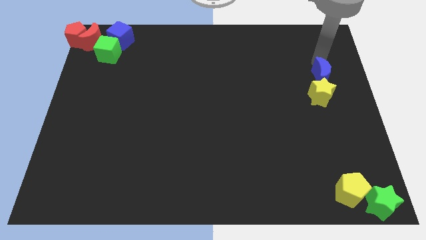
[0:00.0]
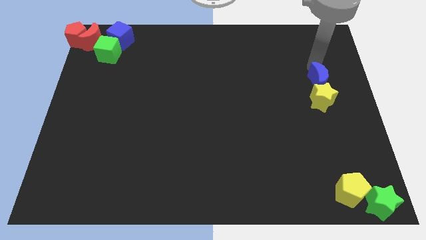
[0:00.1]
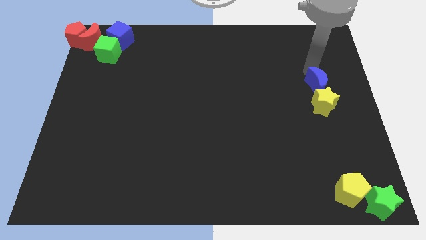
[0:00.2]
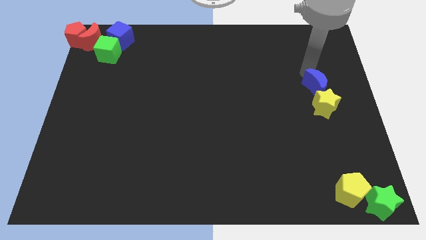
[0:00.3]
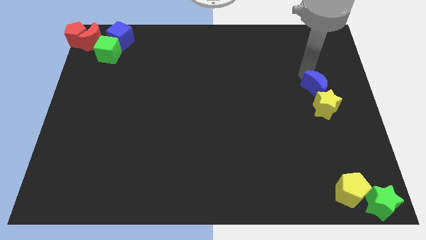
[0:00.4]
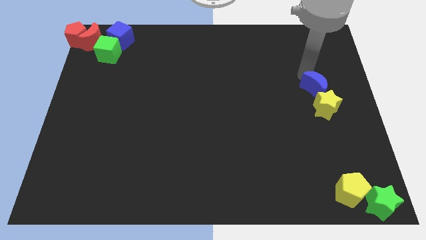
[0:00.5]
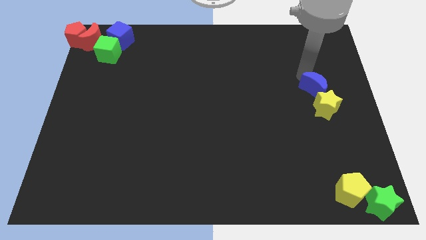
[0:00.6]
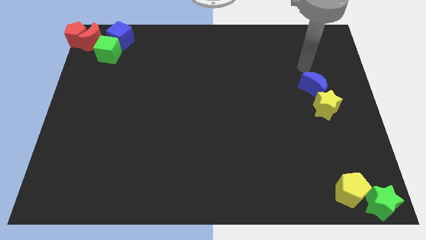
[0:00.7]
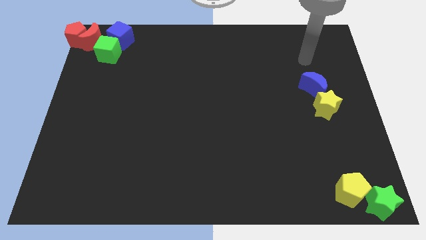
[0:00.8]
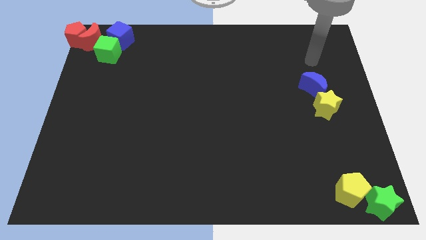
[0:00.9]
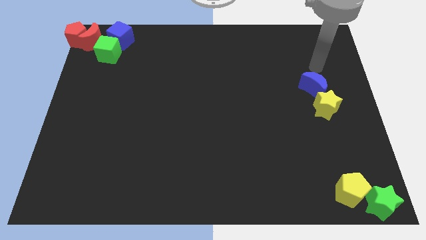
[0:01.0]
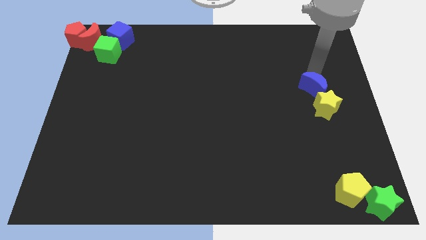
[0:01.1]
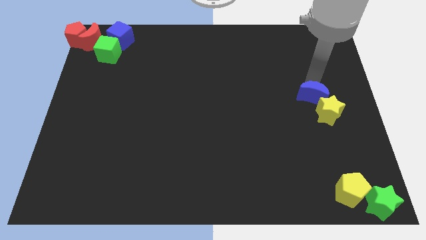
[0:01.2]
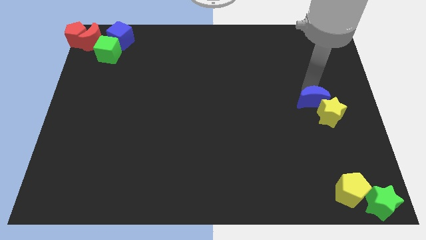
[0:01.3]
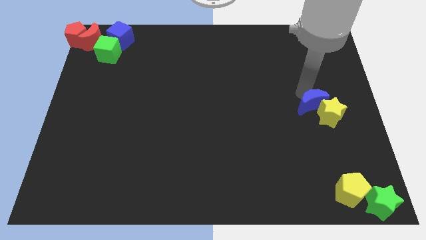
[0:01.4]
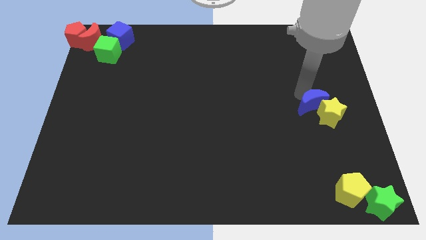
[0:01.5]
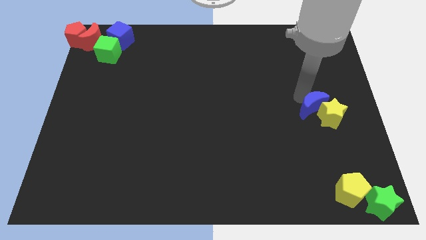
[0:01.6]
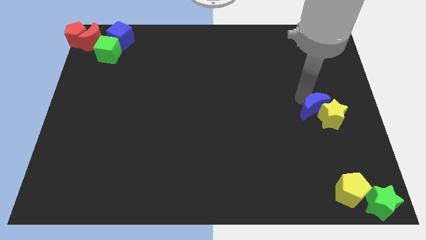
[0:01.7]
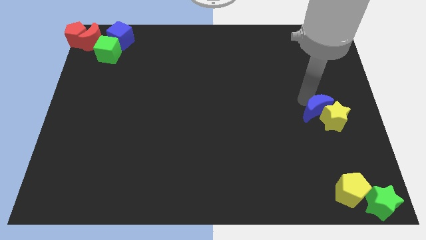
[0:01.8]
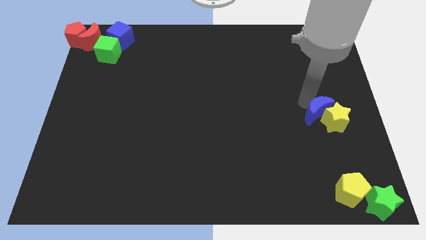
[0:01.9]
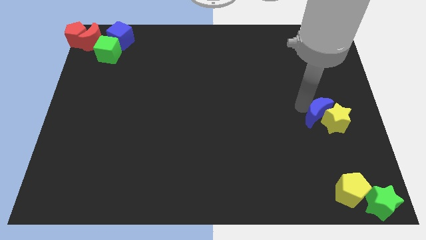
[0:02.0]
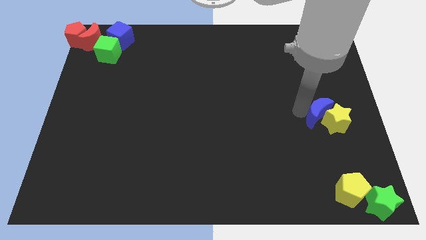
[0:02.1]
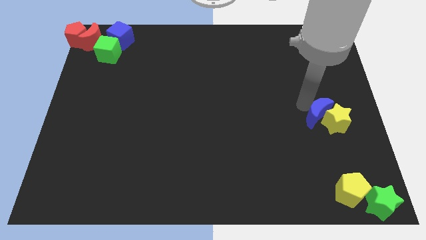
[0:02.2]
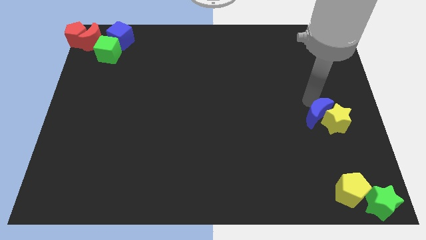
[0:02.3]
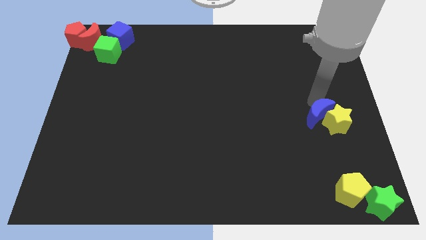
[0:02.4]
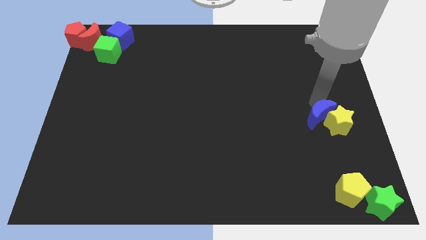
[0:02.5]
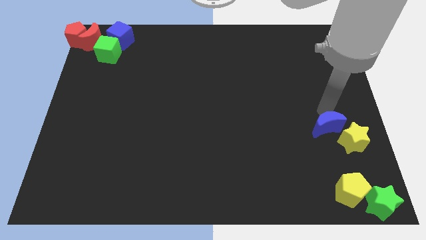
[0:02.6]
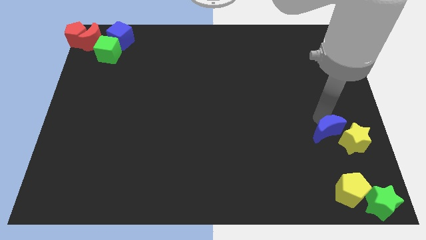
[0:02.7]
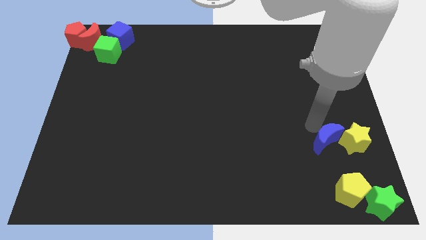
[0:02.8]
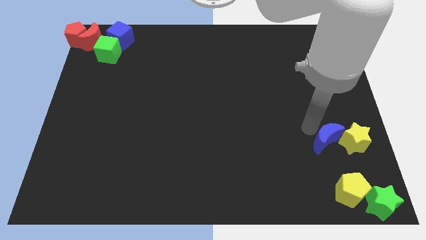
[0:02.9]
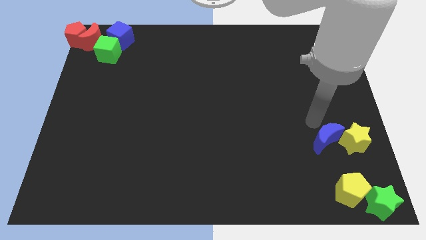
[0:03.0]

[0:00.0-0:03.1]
place the blue moon beside the yellow star

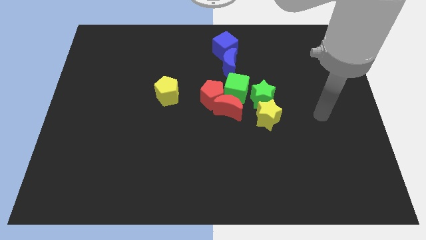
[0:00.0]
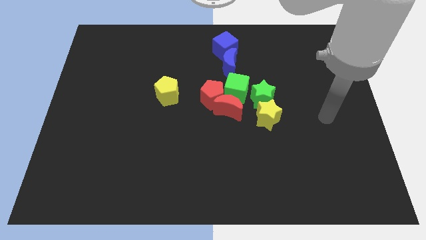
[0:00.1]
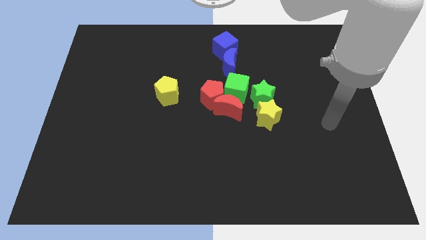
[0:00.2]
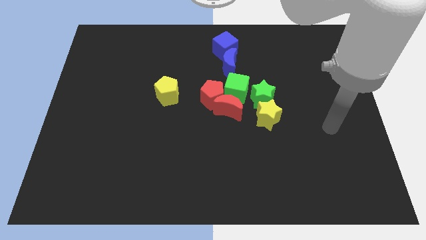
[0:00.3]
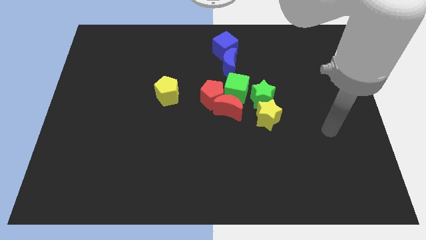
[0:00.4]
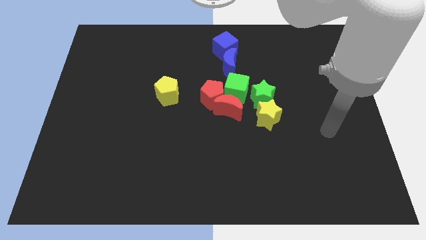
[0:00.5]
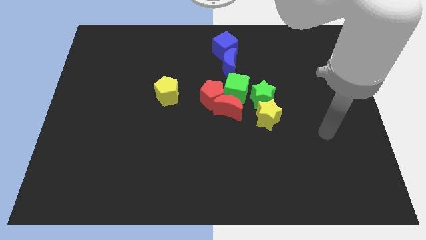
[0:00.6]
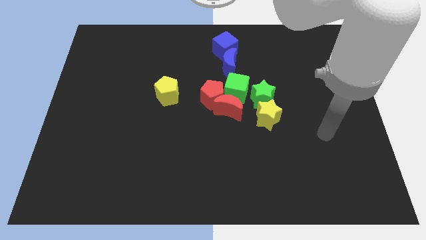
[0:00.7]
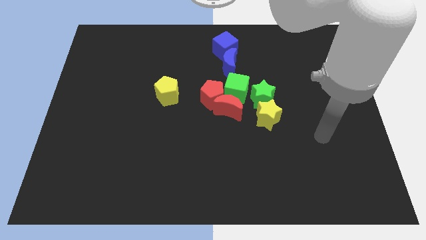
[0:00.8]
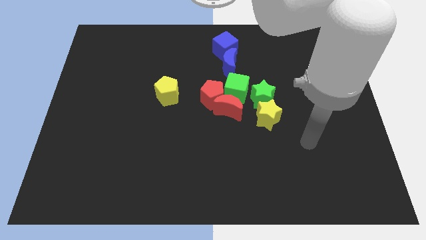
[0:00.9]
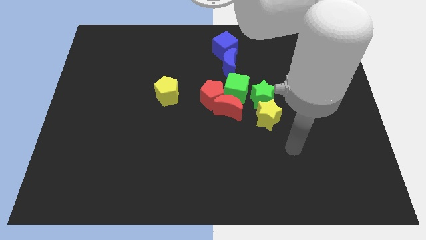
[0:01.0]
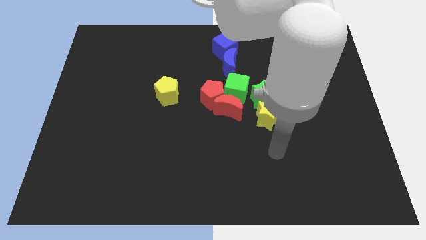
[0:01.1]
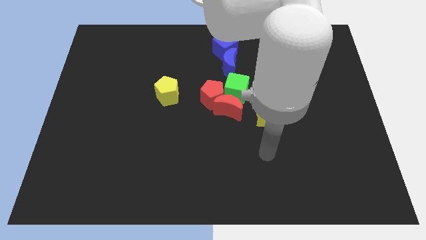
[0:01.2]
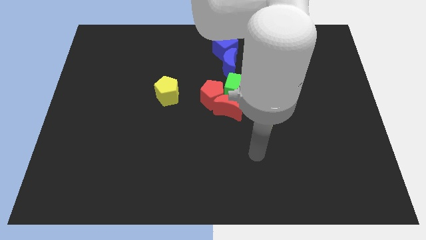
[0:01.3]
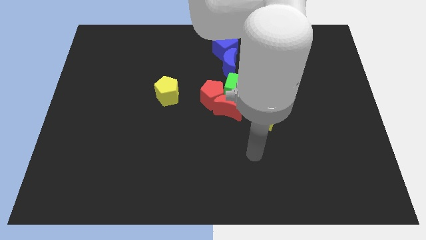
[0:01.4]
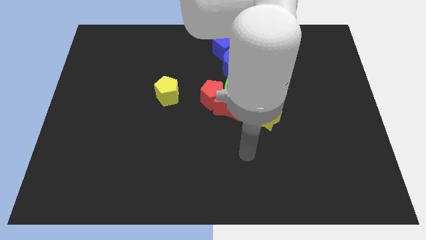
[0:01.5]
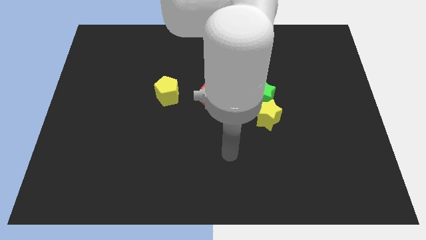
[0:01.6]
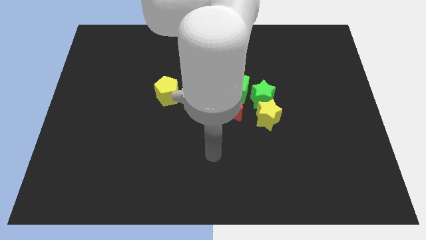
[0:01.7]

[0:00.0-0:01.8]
move the arm at the bottom of the red crescent vertically

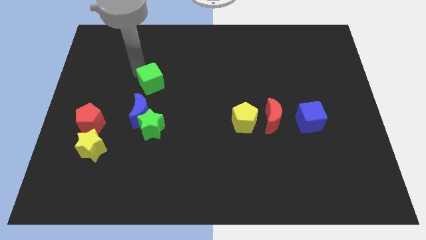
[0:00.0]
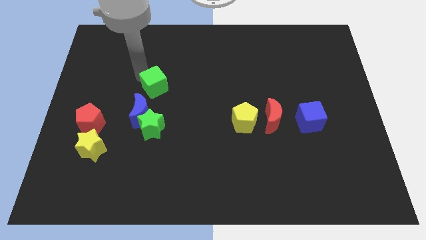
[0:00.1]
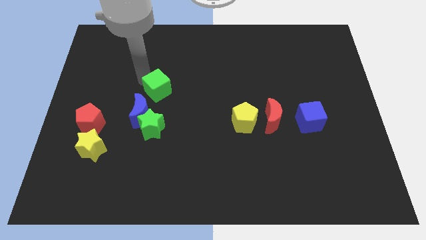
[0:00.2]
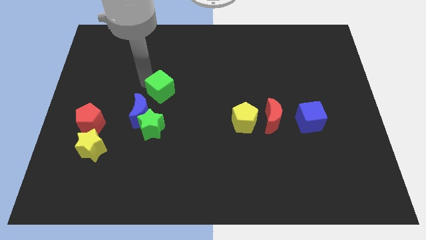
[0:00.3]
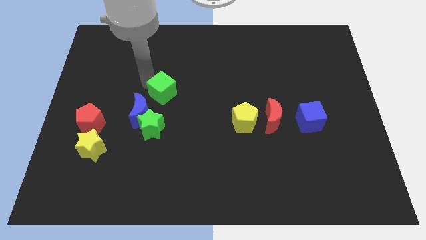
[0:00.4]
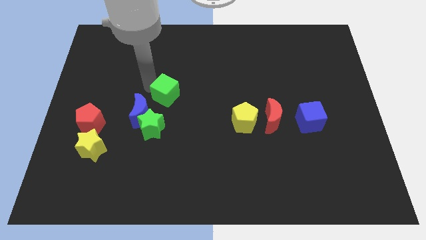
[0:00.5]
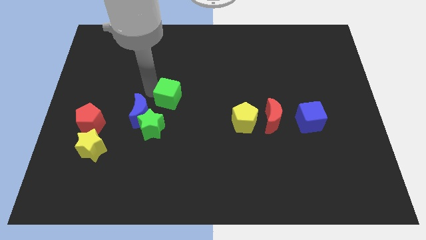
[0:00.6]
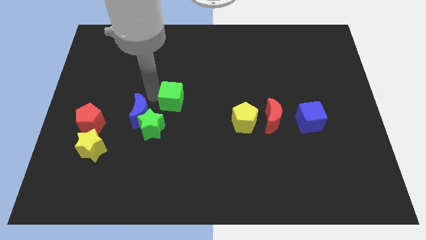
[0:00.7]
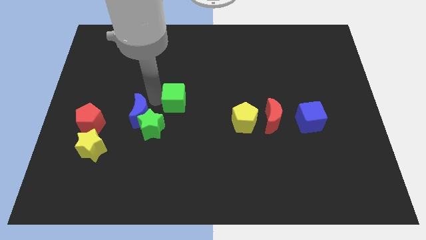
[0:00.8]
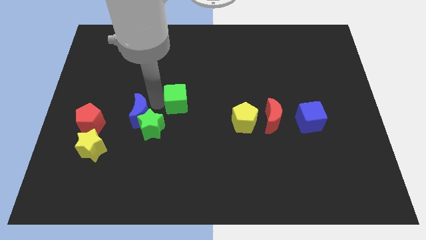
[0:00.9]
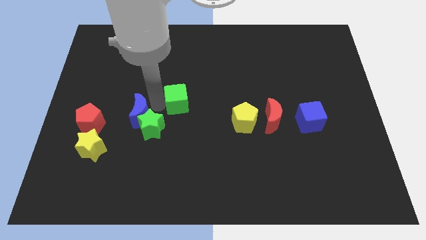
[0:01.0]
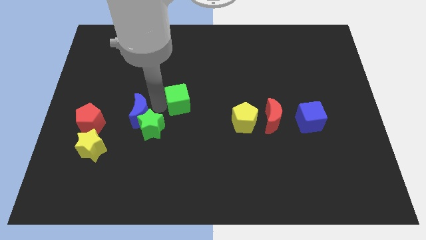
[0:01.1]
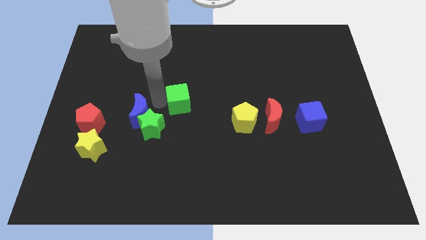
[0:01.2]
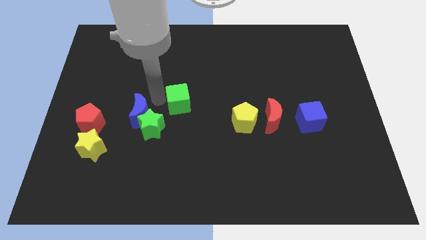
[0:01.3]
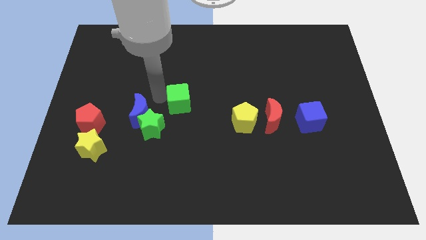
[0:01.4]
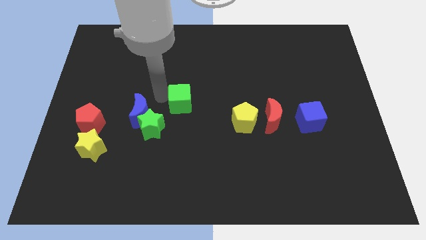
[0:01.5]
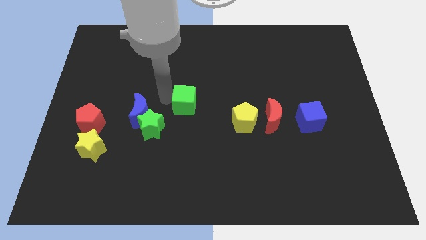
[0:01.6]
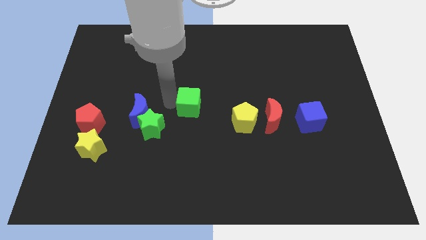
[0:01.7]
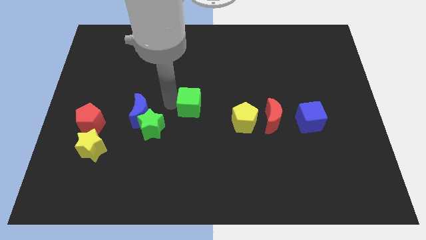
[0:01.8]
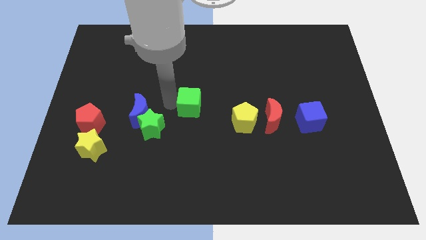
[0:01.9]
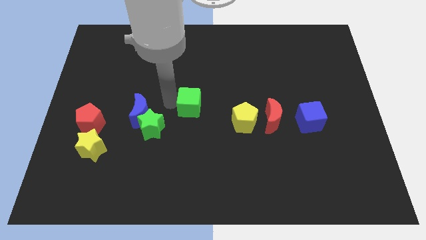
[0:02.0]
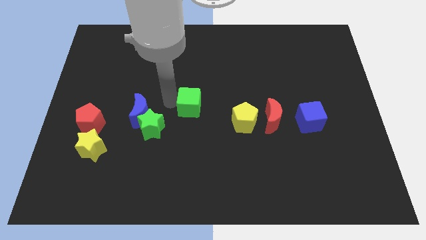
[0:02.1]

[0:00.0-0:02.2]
place the green cube diagonally on the top right side of the green star

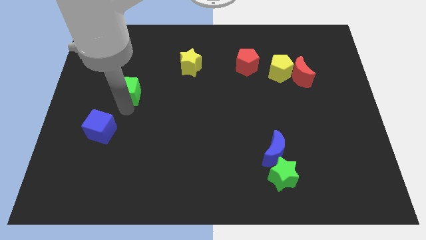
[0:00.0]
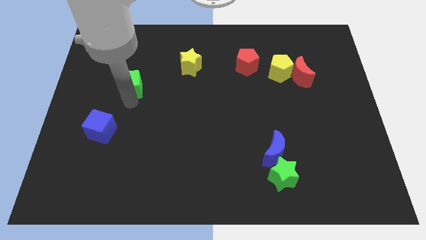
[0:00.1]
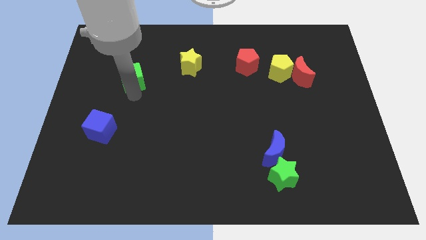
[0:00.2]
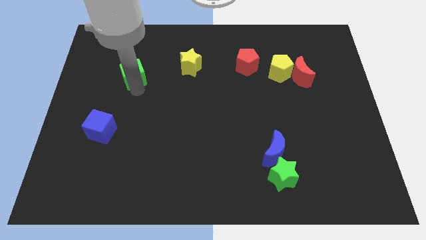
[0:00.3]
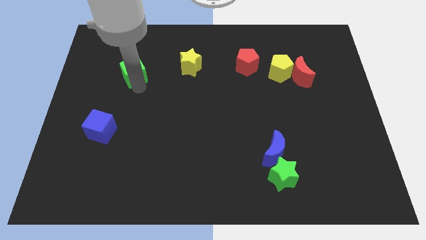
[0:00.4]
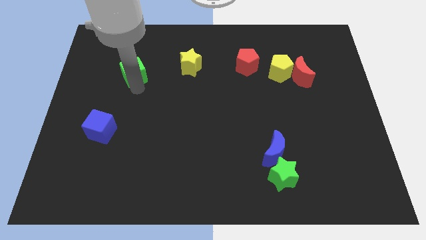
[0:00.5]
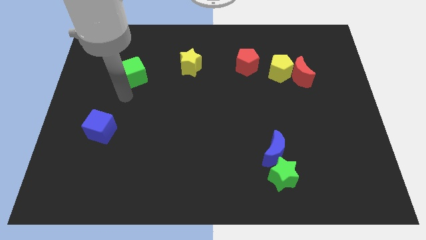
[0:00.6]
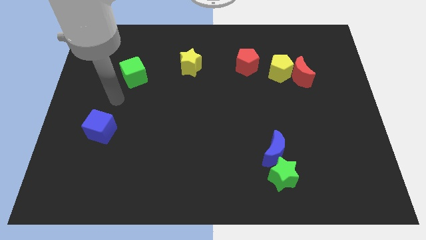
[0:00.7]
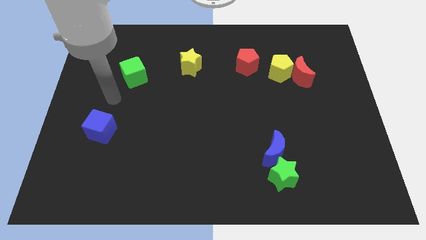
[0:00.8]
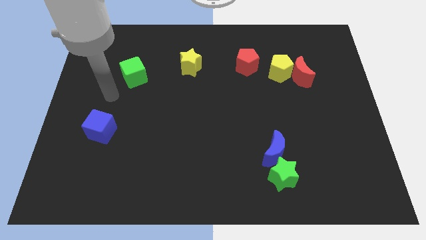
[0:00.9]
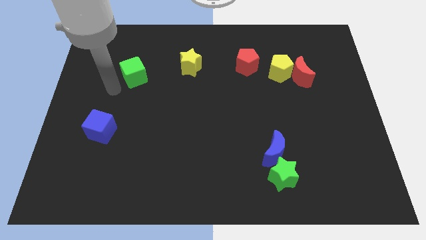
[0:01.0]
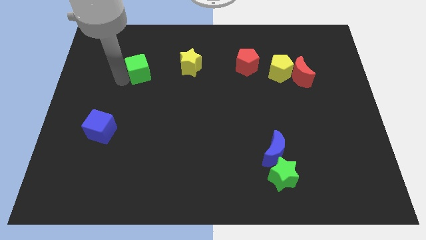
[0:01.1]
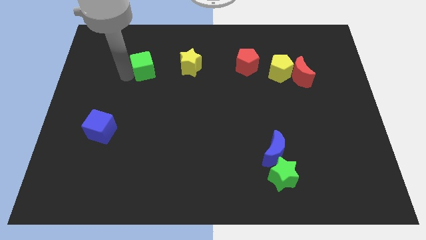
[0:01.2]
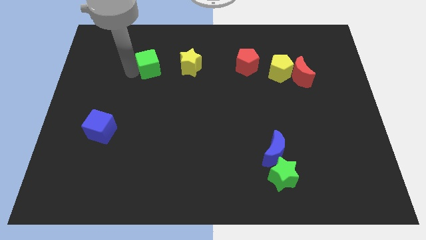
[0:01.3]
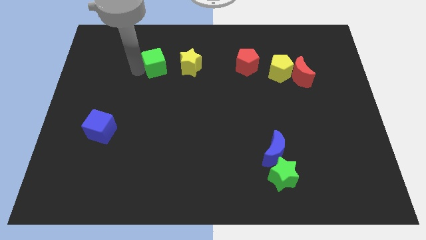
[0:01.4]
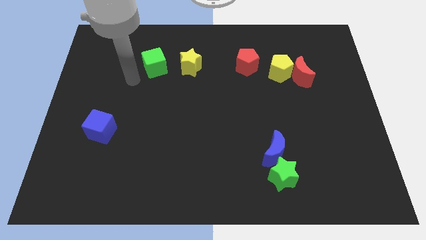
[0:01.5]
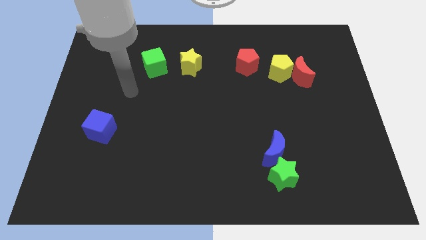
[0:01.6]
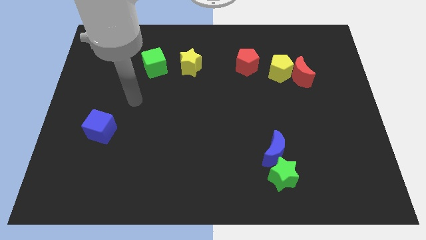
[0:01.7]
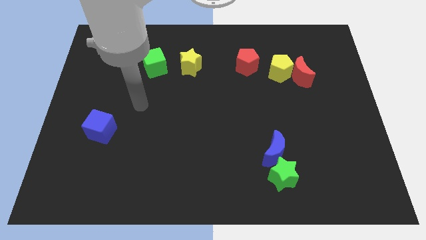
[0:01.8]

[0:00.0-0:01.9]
move the green cube to the left of the yellow star

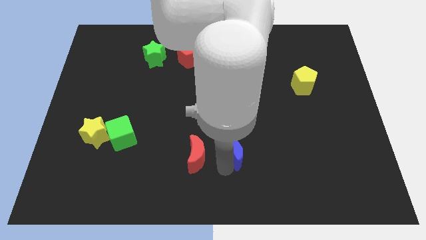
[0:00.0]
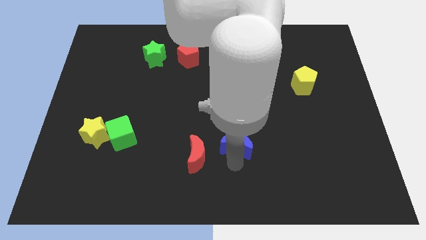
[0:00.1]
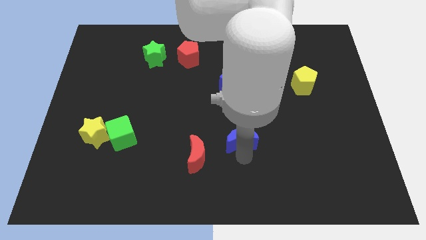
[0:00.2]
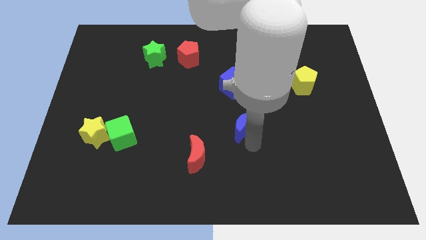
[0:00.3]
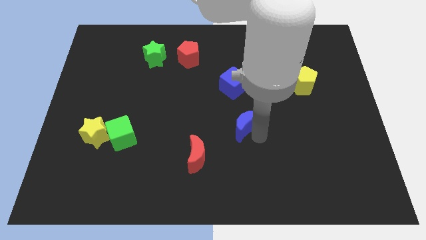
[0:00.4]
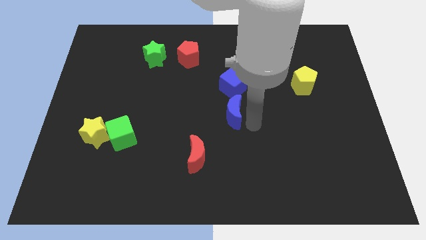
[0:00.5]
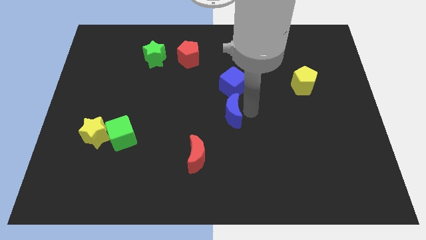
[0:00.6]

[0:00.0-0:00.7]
place the blue moon below the blue cube
